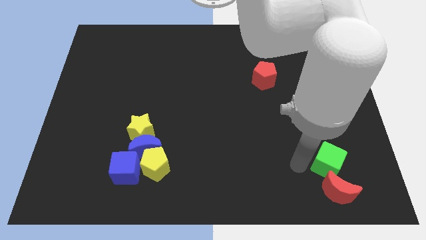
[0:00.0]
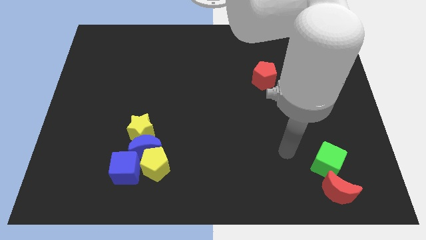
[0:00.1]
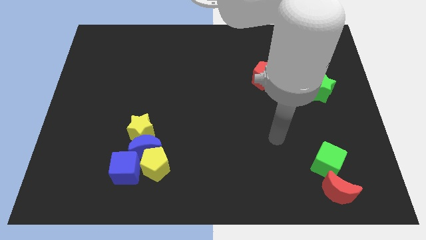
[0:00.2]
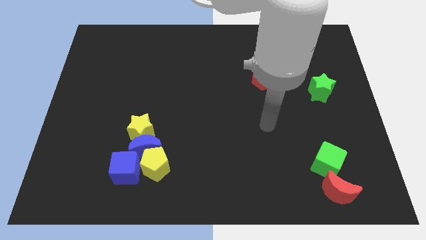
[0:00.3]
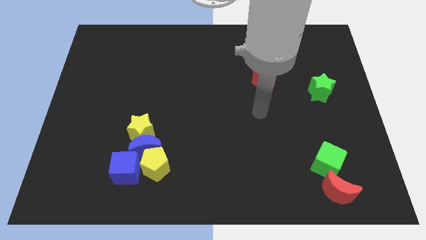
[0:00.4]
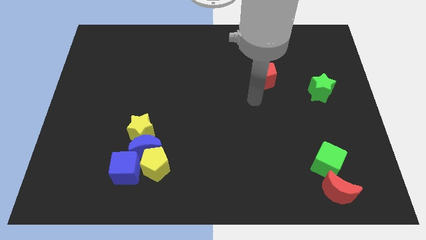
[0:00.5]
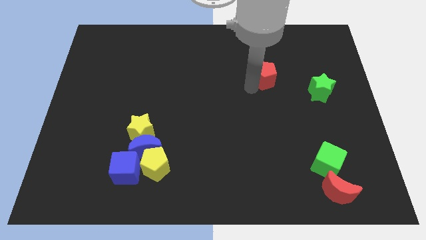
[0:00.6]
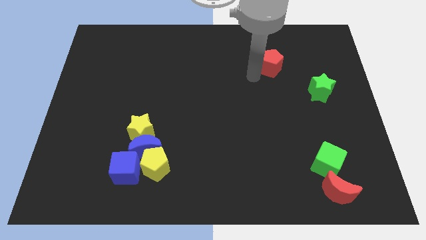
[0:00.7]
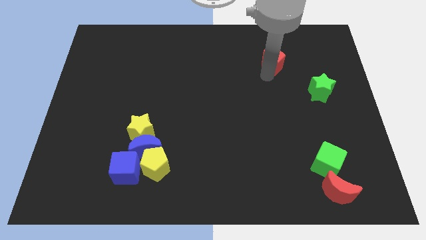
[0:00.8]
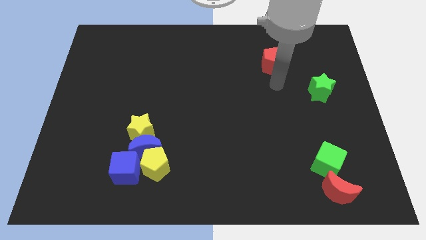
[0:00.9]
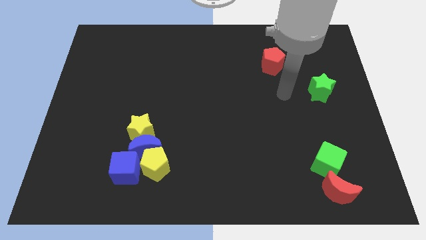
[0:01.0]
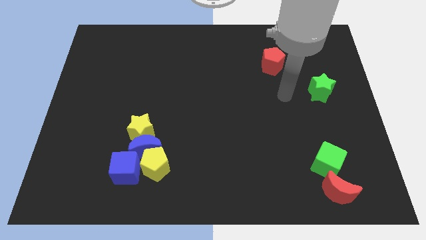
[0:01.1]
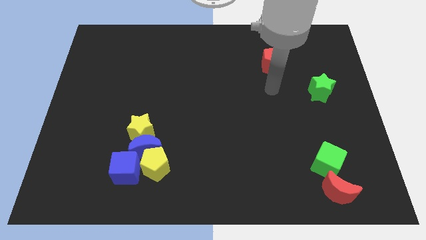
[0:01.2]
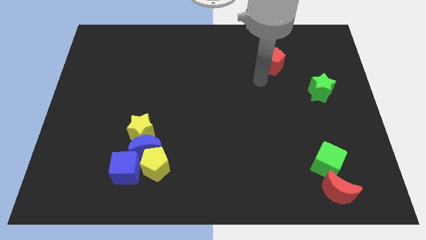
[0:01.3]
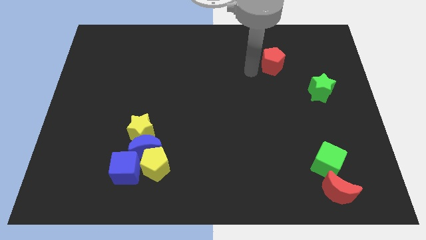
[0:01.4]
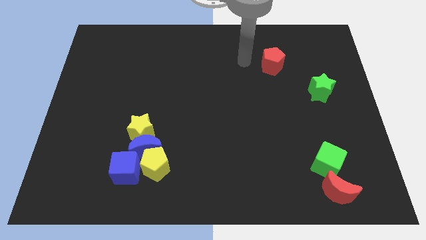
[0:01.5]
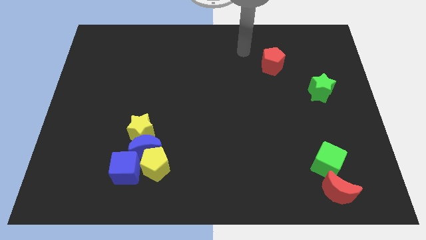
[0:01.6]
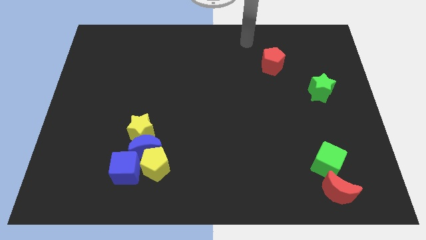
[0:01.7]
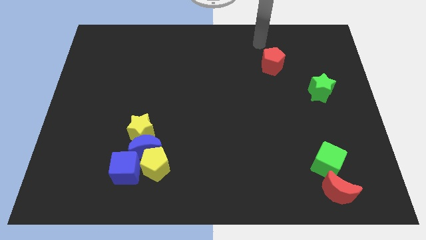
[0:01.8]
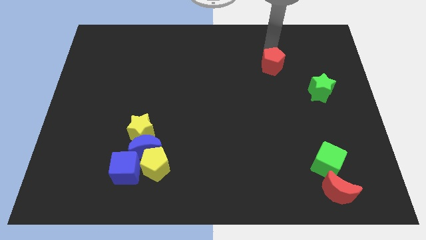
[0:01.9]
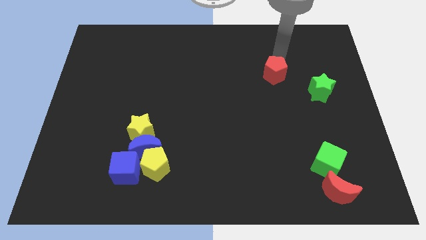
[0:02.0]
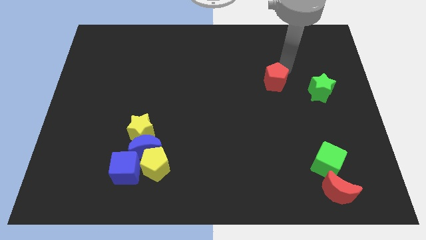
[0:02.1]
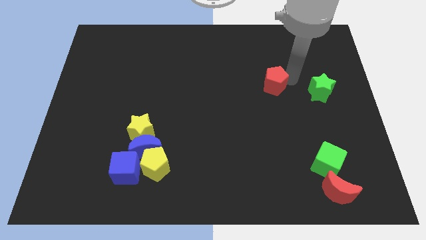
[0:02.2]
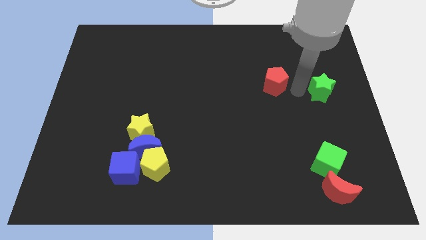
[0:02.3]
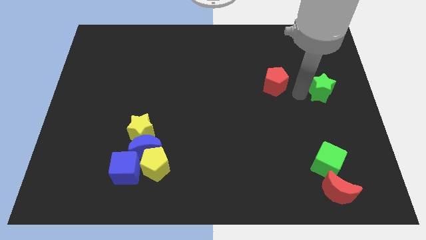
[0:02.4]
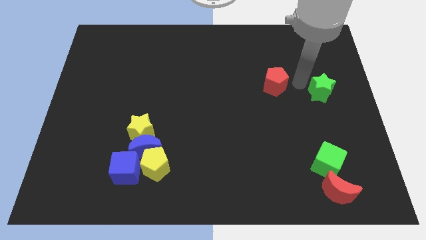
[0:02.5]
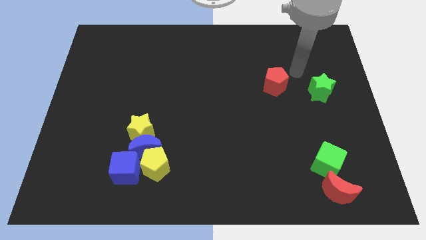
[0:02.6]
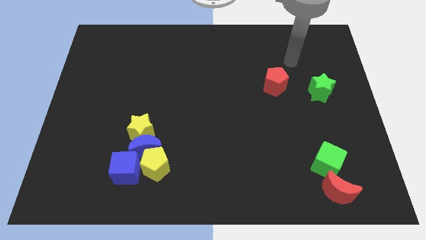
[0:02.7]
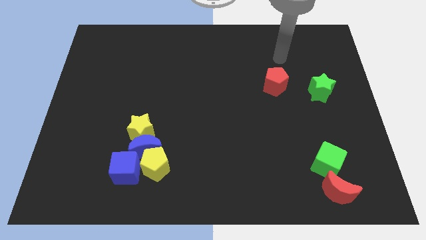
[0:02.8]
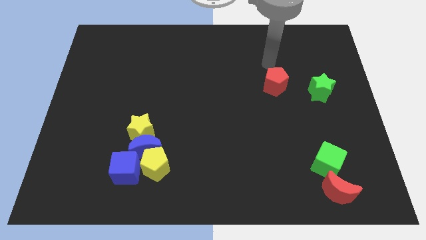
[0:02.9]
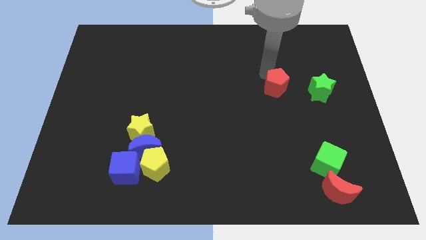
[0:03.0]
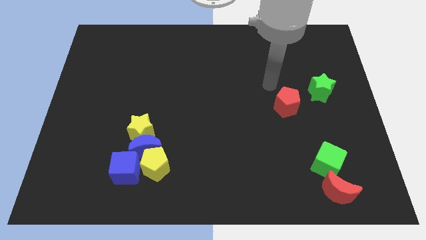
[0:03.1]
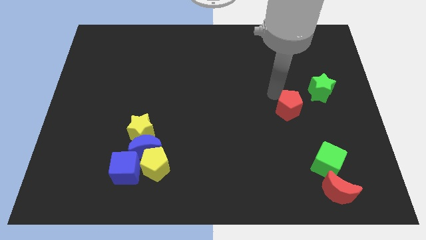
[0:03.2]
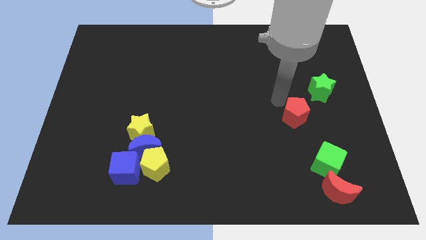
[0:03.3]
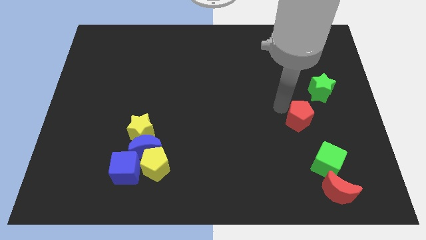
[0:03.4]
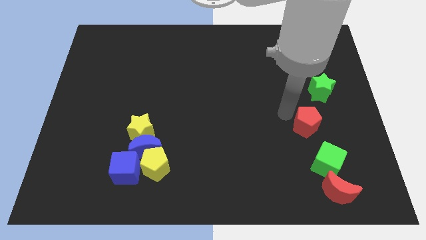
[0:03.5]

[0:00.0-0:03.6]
push the red pentagon towards the top side of the green cube

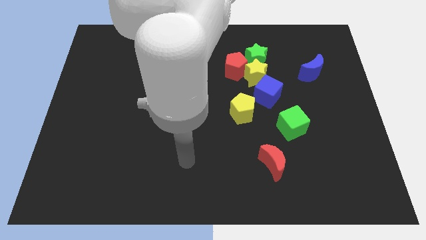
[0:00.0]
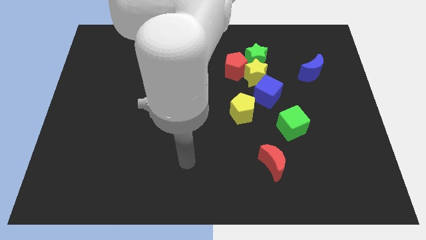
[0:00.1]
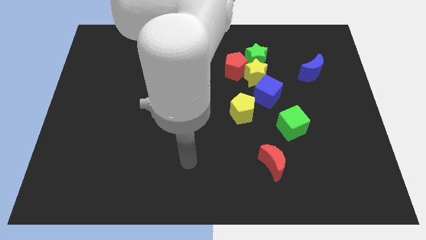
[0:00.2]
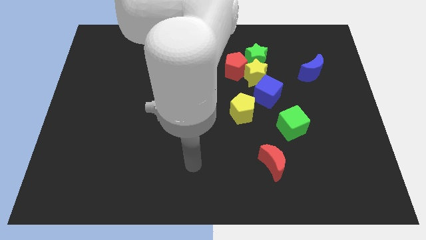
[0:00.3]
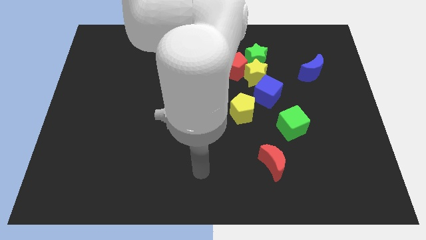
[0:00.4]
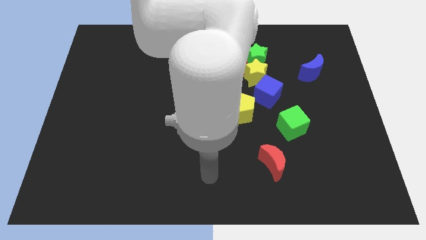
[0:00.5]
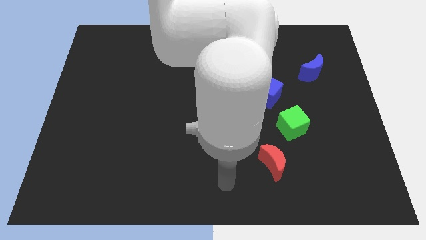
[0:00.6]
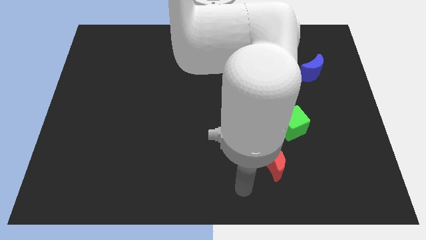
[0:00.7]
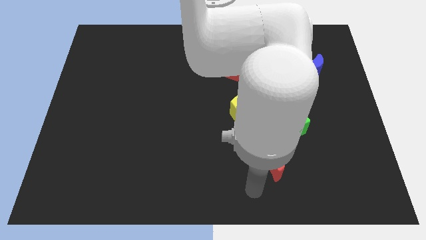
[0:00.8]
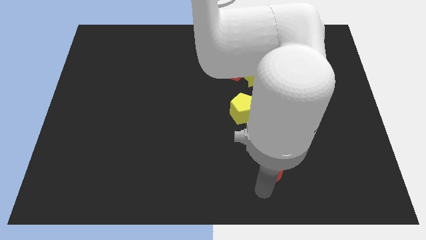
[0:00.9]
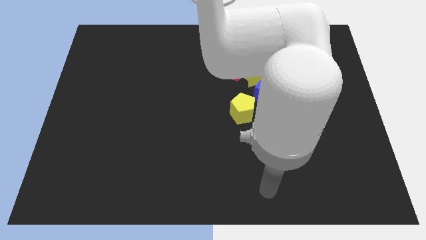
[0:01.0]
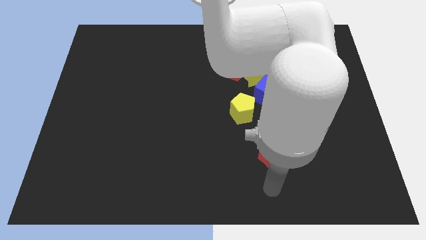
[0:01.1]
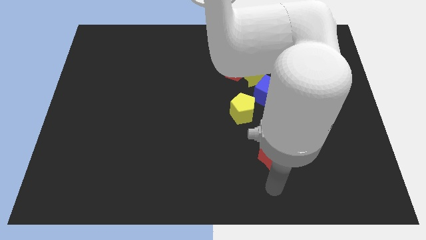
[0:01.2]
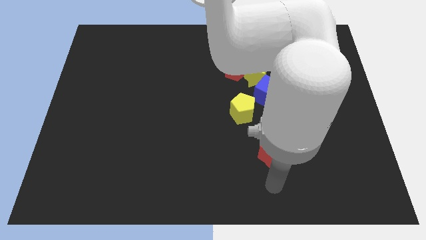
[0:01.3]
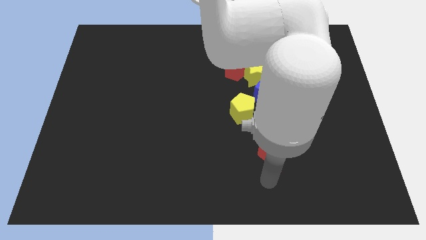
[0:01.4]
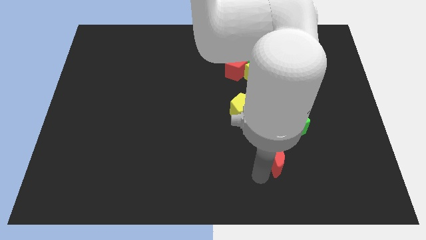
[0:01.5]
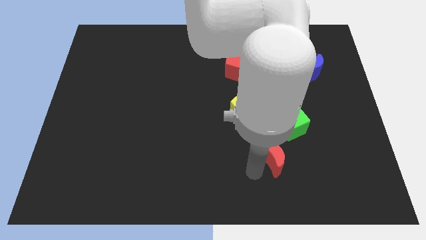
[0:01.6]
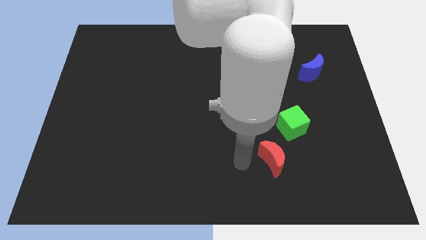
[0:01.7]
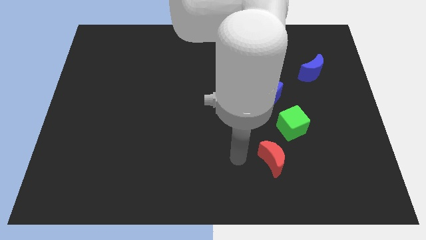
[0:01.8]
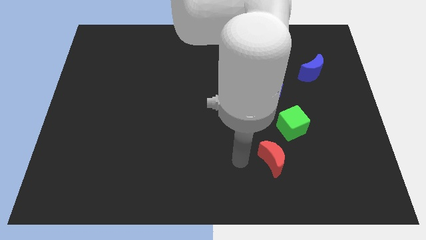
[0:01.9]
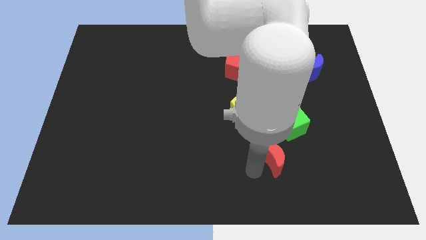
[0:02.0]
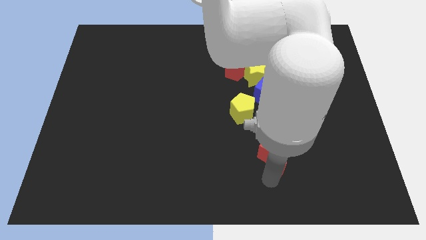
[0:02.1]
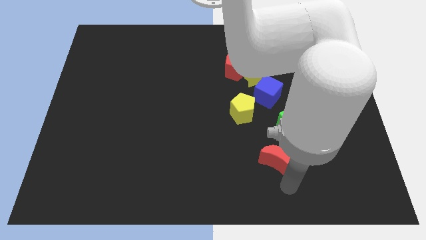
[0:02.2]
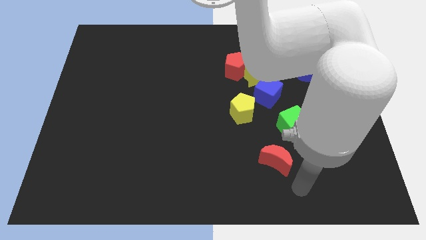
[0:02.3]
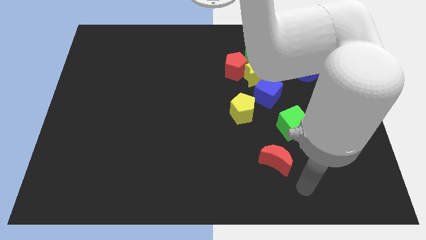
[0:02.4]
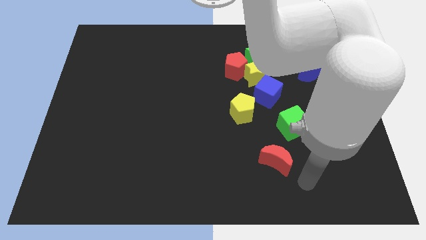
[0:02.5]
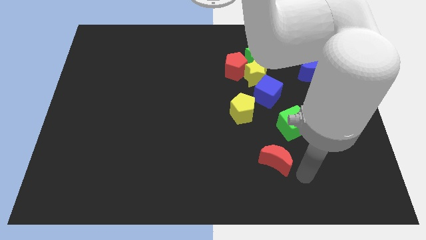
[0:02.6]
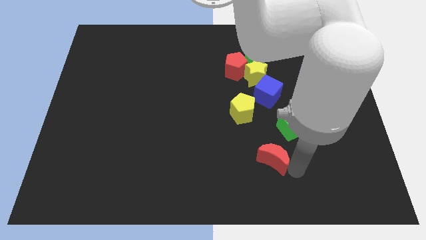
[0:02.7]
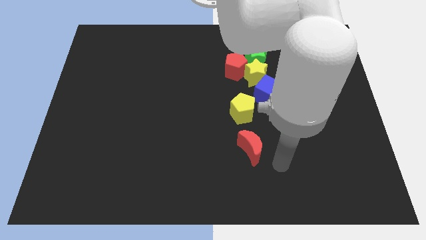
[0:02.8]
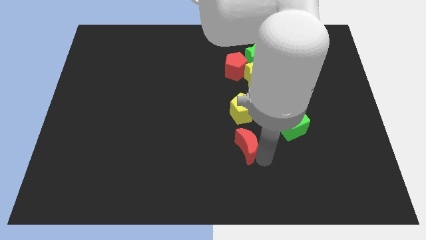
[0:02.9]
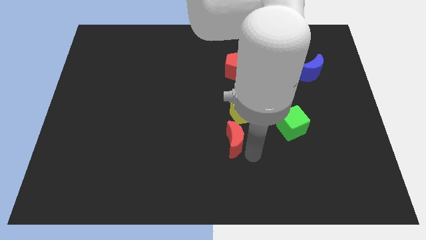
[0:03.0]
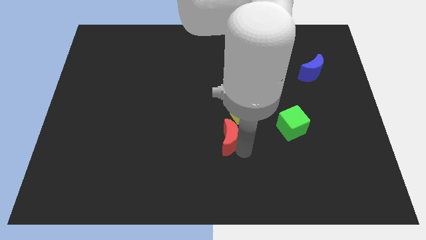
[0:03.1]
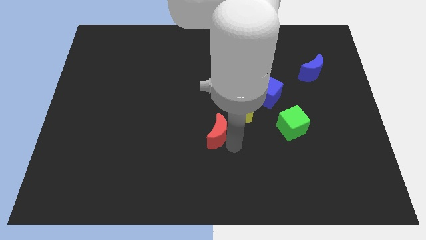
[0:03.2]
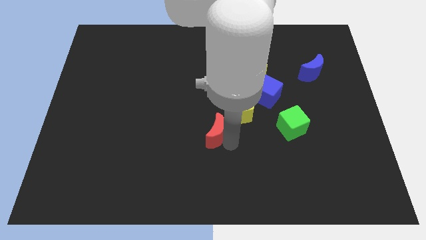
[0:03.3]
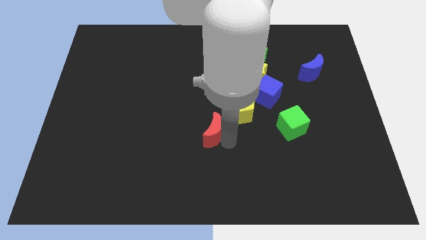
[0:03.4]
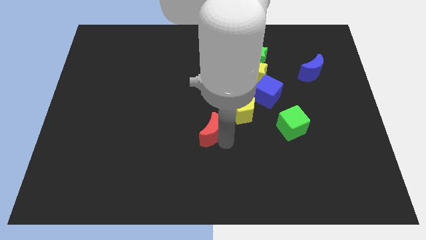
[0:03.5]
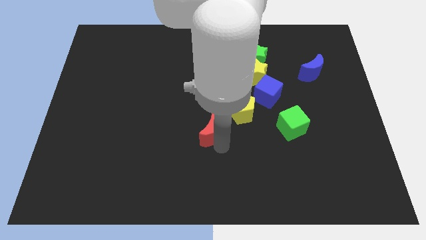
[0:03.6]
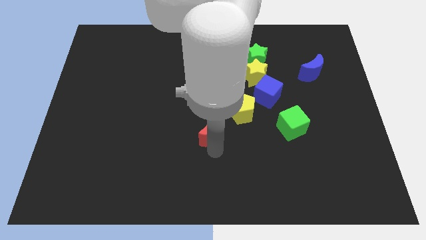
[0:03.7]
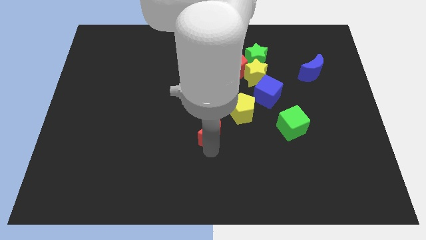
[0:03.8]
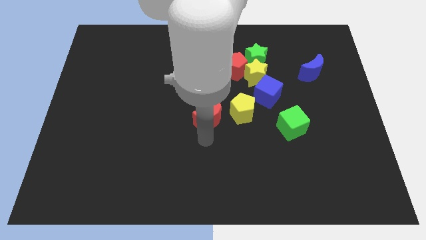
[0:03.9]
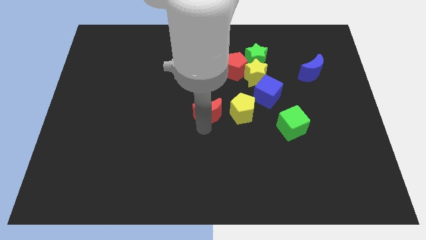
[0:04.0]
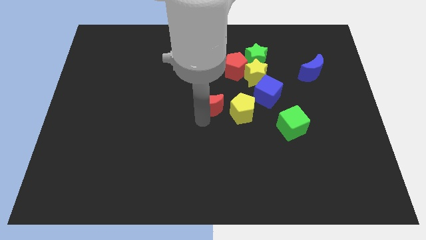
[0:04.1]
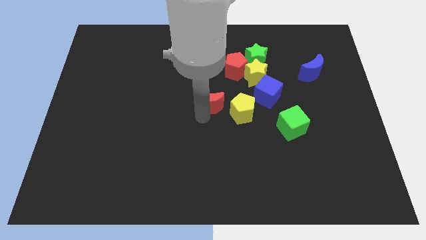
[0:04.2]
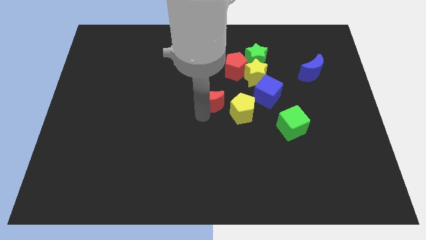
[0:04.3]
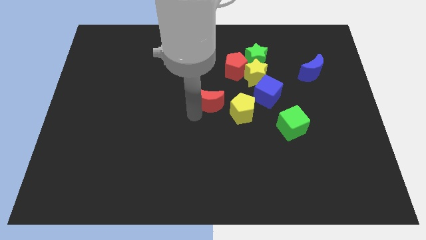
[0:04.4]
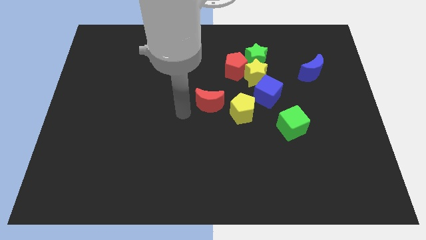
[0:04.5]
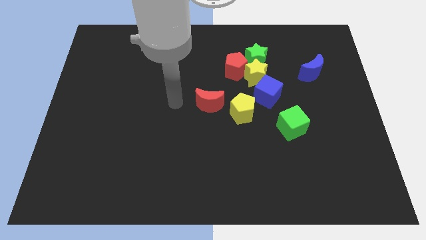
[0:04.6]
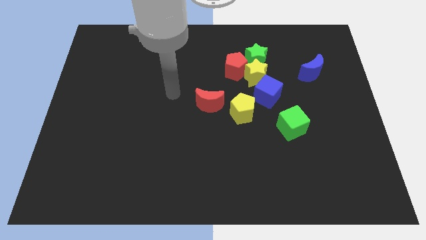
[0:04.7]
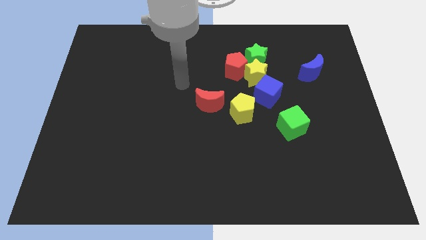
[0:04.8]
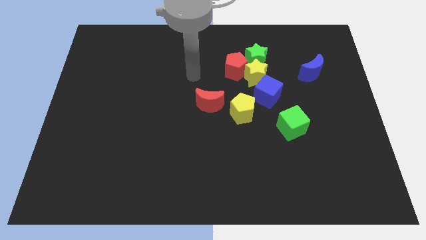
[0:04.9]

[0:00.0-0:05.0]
move the red crescent to the left side of the yellow pentagon

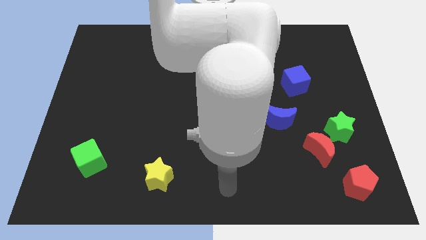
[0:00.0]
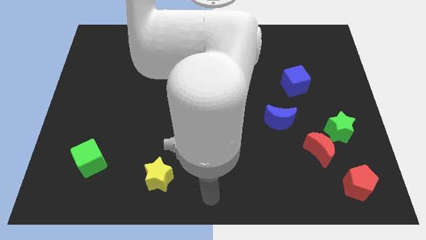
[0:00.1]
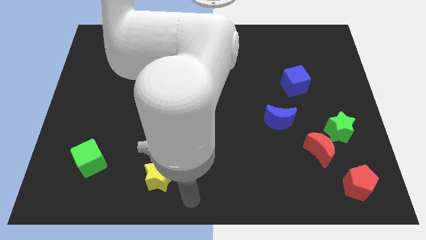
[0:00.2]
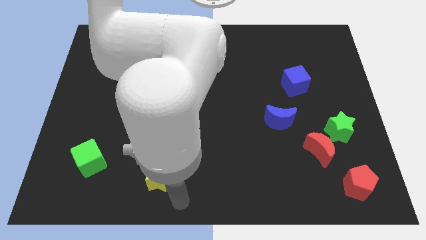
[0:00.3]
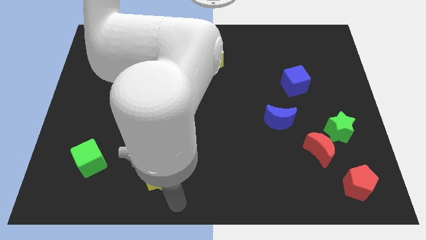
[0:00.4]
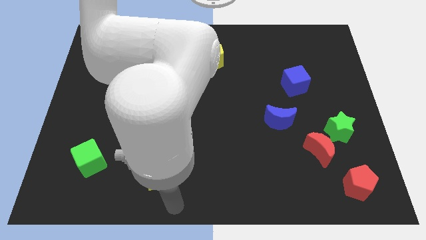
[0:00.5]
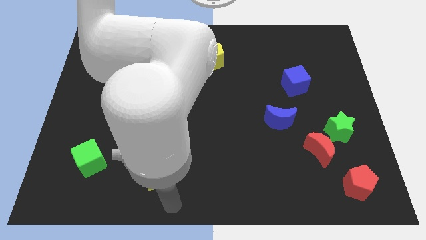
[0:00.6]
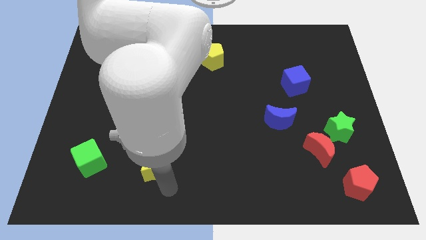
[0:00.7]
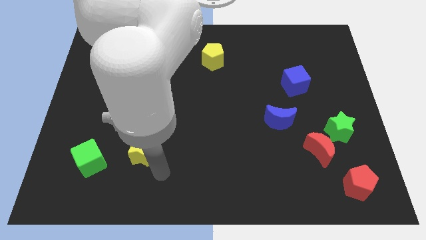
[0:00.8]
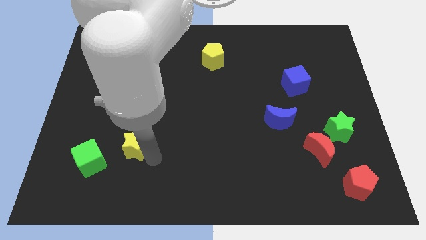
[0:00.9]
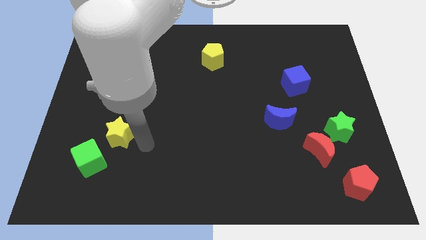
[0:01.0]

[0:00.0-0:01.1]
place the yellow star right to the green cube
